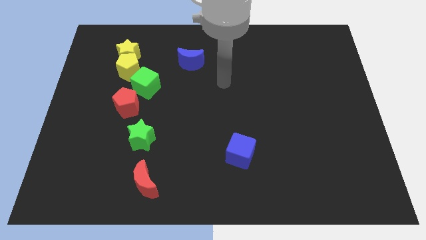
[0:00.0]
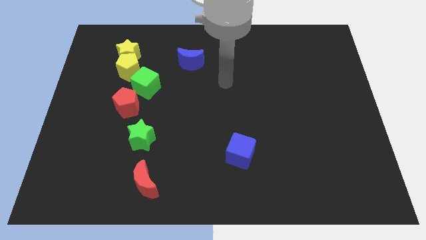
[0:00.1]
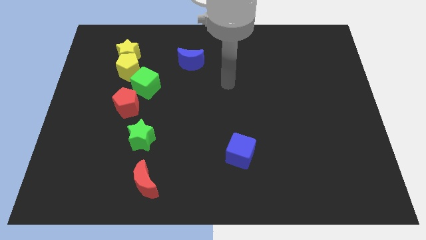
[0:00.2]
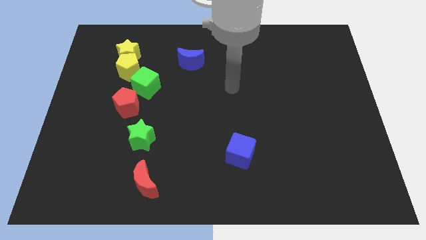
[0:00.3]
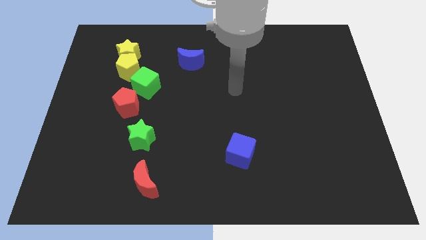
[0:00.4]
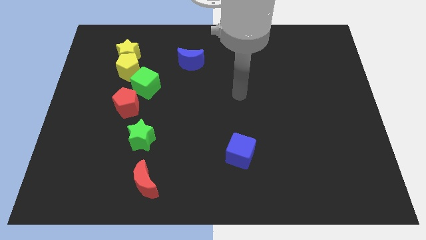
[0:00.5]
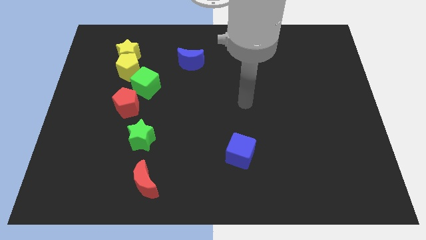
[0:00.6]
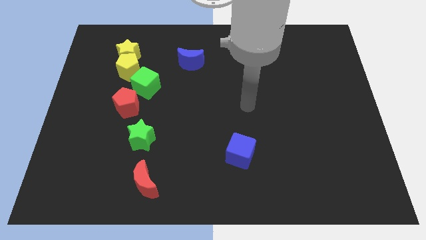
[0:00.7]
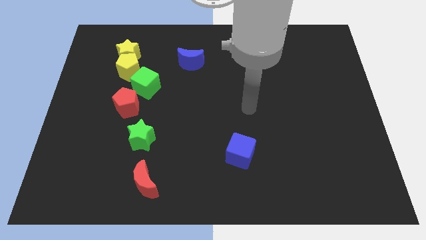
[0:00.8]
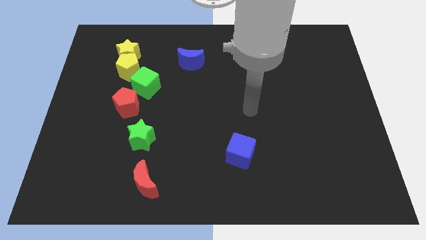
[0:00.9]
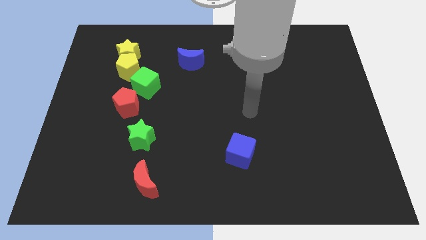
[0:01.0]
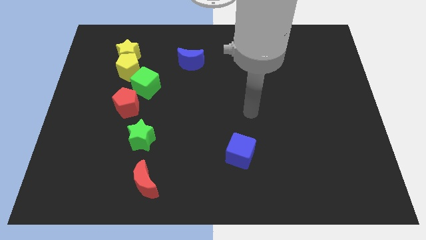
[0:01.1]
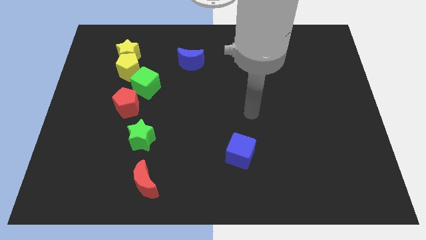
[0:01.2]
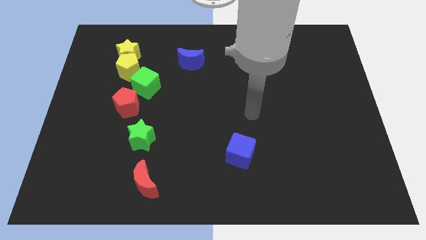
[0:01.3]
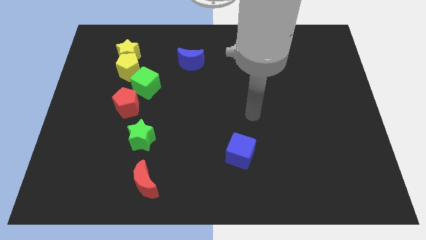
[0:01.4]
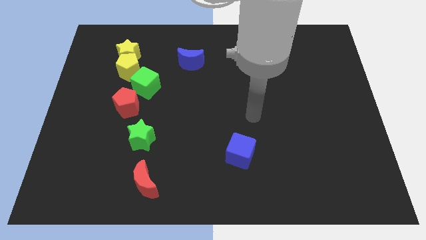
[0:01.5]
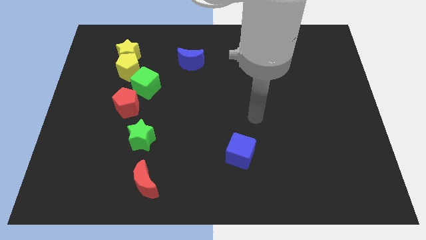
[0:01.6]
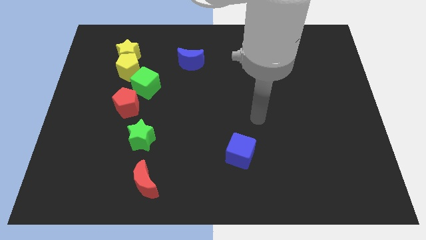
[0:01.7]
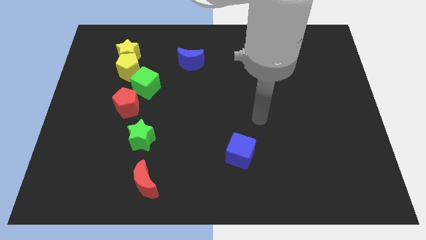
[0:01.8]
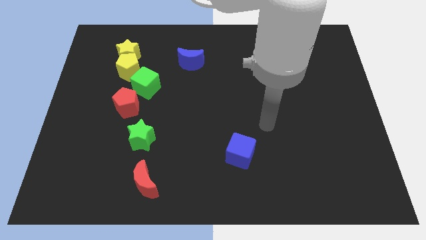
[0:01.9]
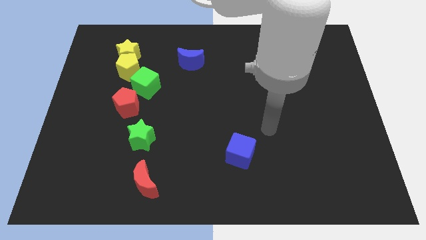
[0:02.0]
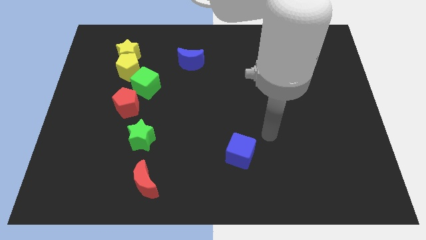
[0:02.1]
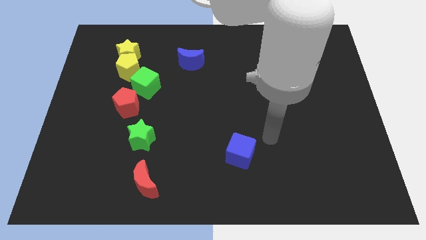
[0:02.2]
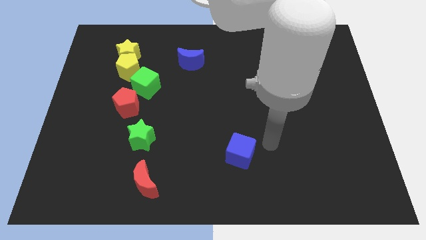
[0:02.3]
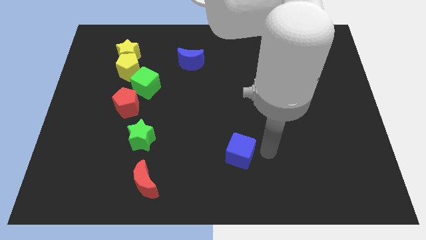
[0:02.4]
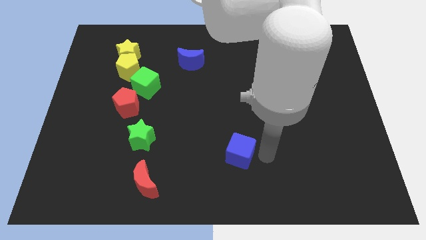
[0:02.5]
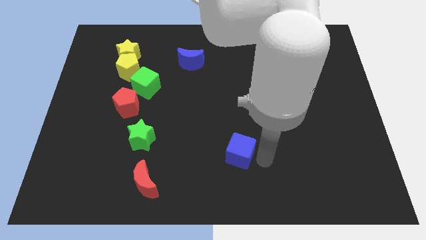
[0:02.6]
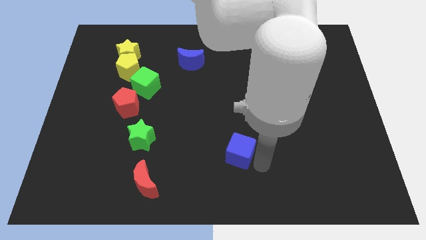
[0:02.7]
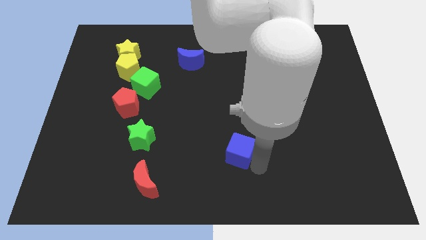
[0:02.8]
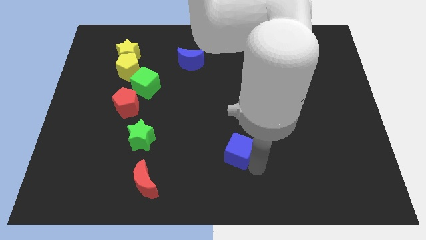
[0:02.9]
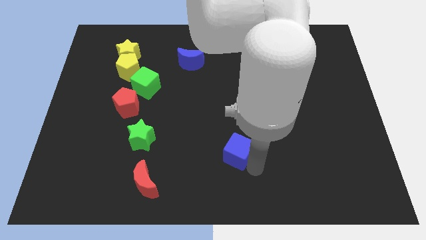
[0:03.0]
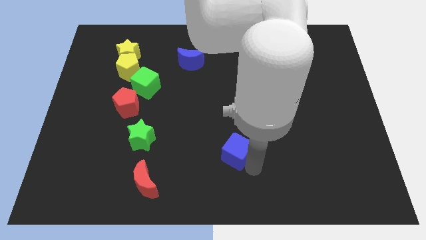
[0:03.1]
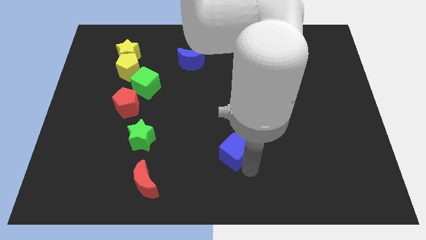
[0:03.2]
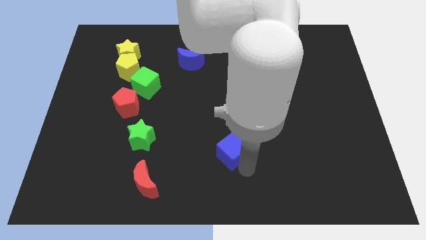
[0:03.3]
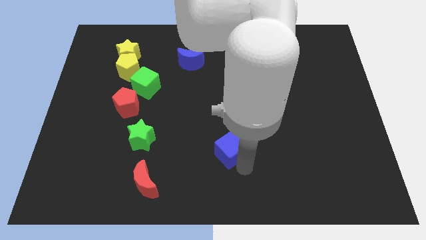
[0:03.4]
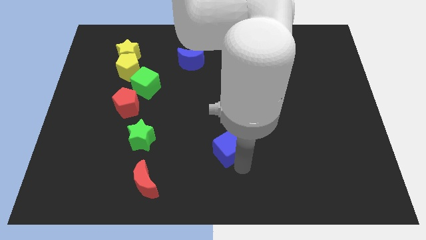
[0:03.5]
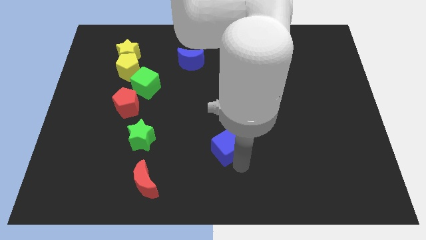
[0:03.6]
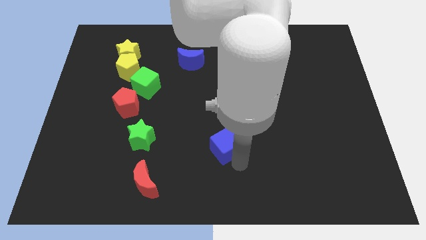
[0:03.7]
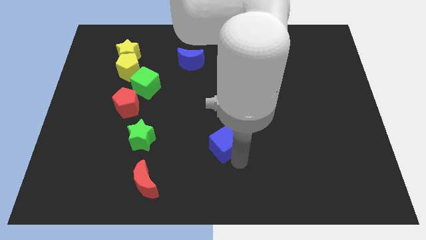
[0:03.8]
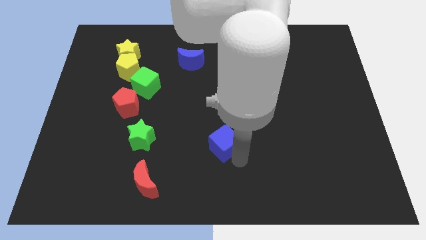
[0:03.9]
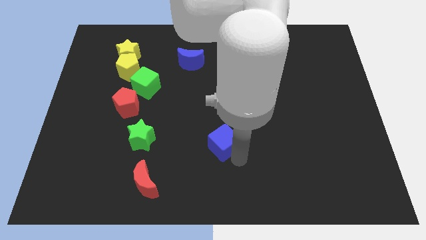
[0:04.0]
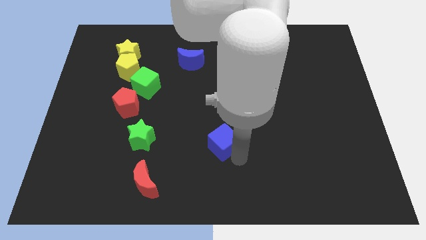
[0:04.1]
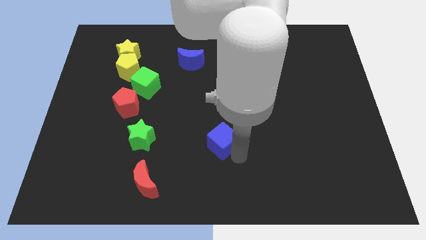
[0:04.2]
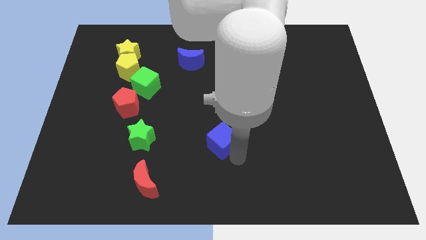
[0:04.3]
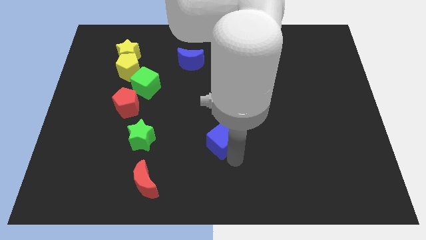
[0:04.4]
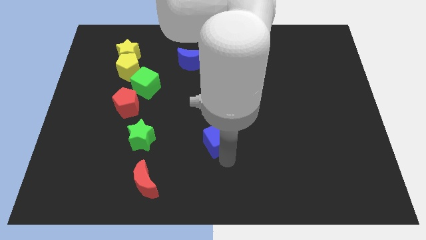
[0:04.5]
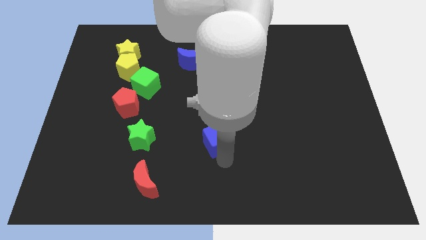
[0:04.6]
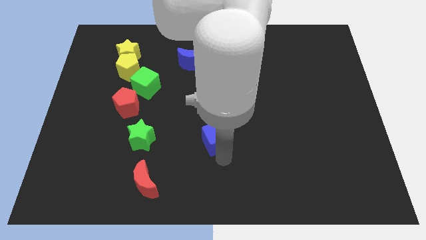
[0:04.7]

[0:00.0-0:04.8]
move the blue cube towards the top

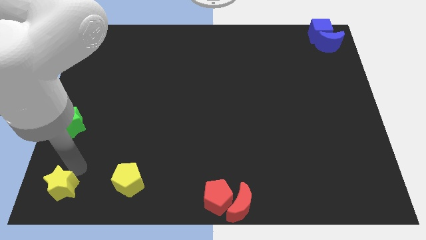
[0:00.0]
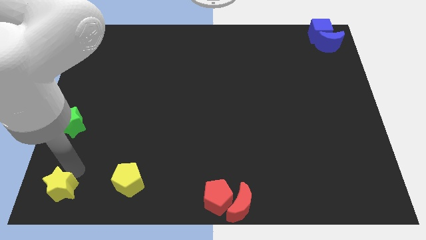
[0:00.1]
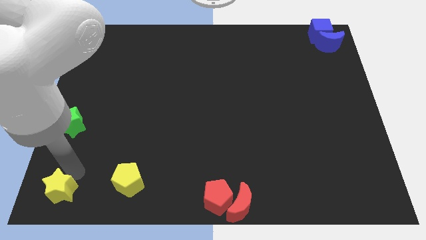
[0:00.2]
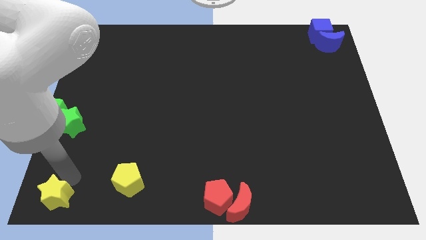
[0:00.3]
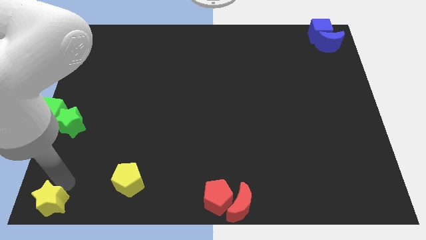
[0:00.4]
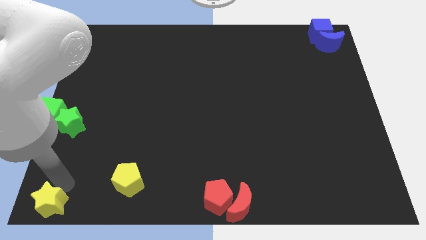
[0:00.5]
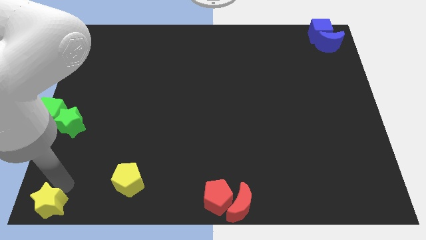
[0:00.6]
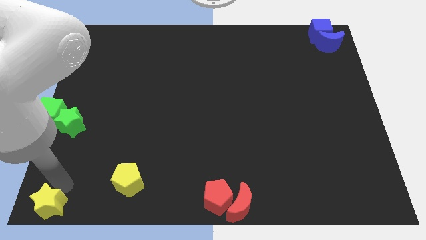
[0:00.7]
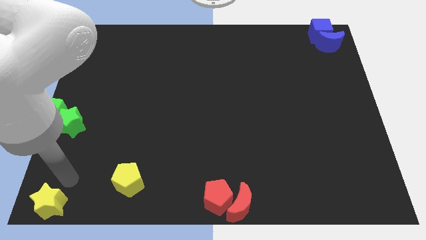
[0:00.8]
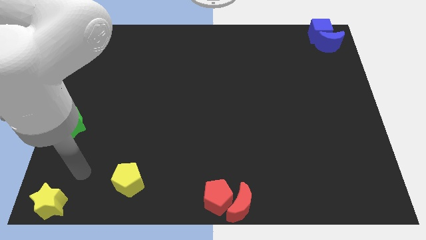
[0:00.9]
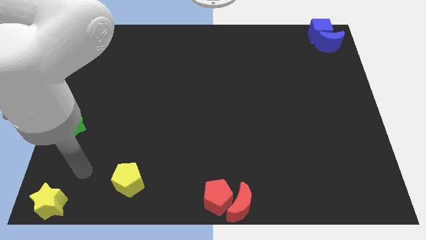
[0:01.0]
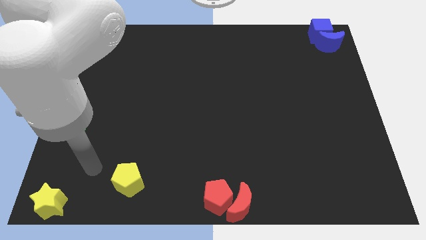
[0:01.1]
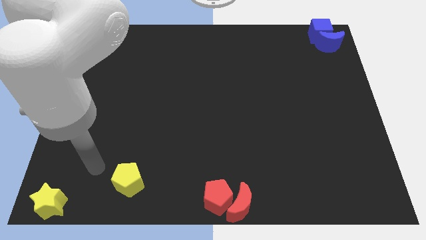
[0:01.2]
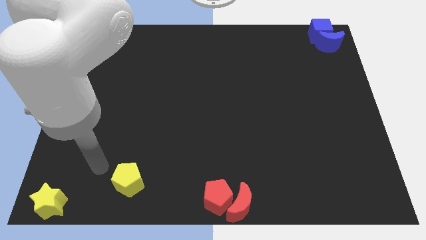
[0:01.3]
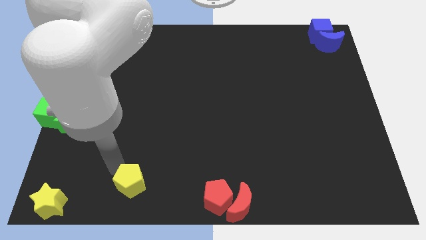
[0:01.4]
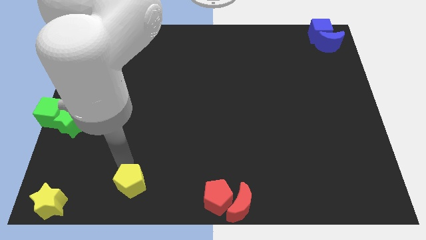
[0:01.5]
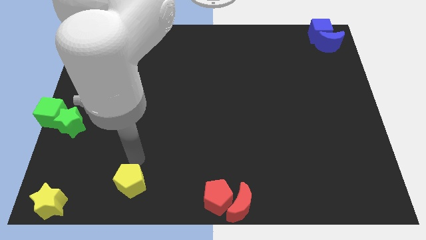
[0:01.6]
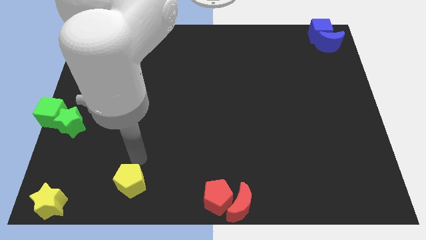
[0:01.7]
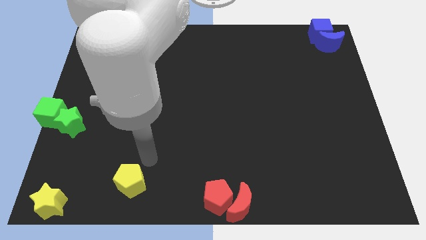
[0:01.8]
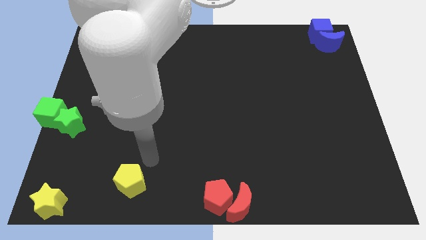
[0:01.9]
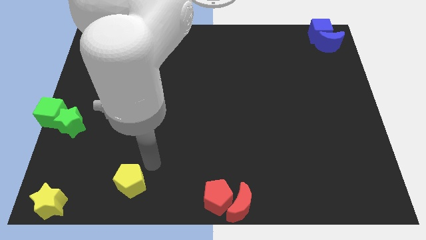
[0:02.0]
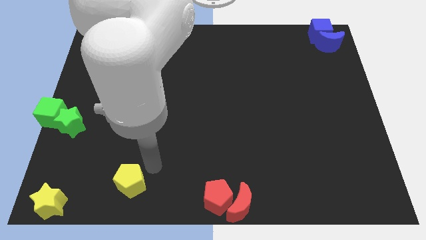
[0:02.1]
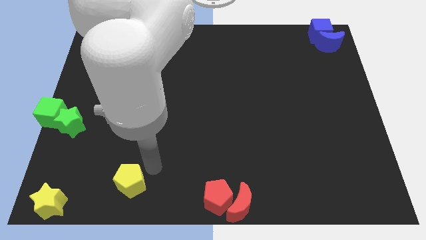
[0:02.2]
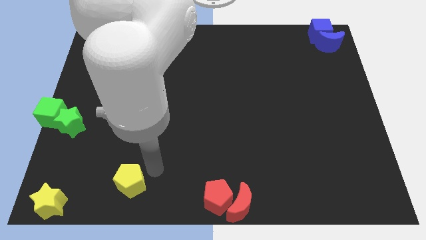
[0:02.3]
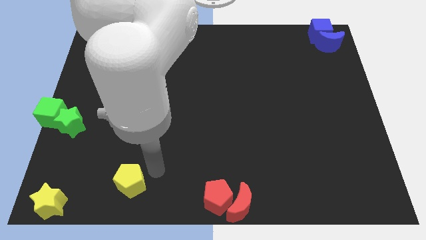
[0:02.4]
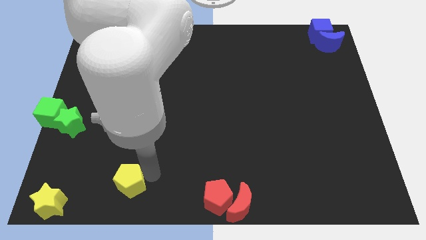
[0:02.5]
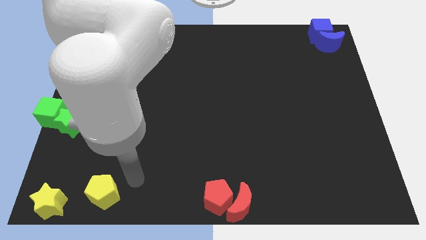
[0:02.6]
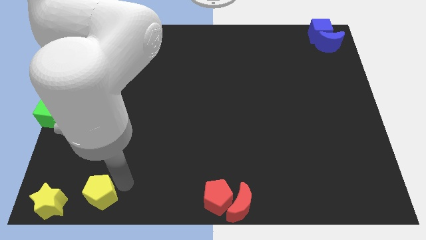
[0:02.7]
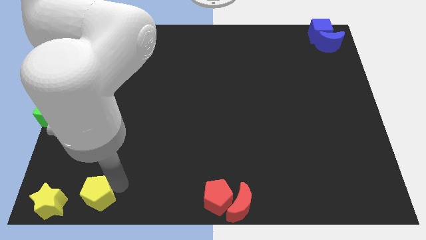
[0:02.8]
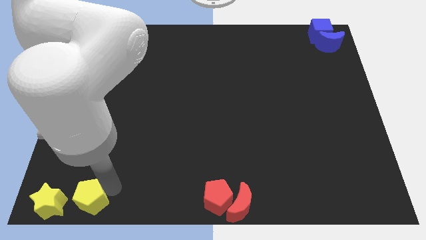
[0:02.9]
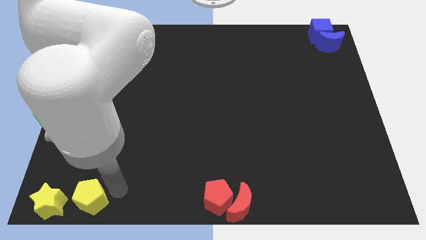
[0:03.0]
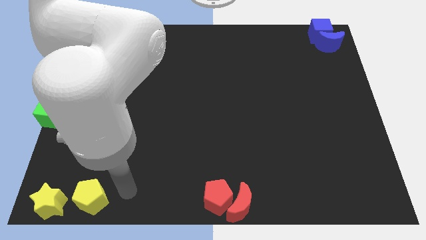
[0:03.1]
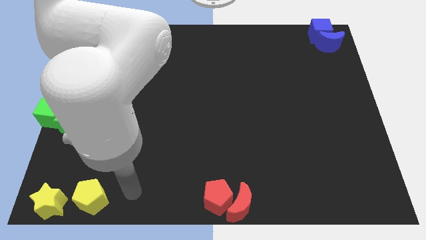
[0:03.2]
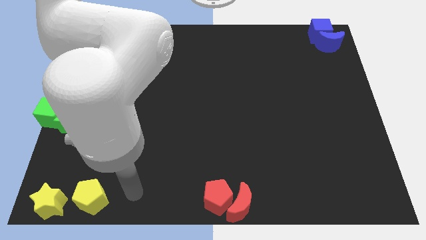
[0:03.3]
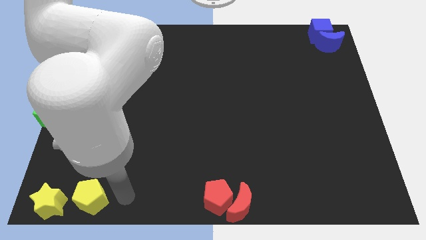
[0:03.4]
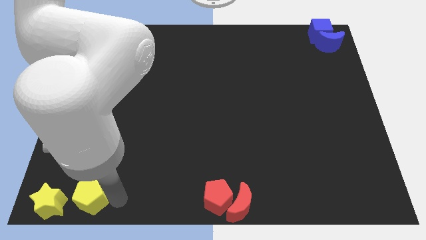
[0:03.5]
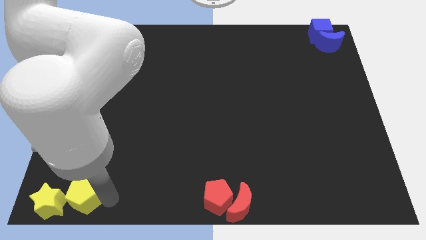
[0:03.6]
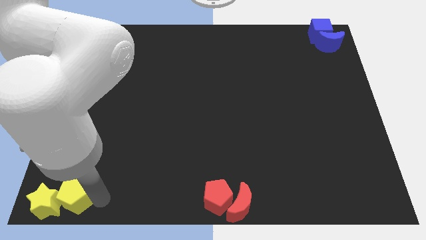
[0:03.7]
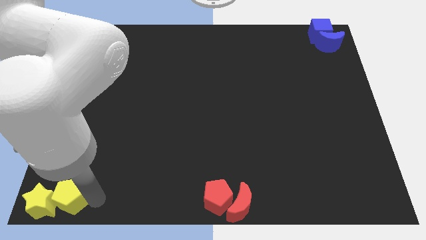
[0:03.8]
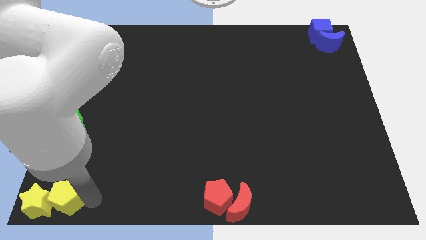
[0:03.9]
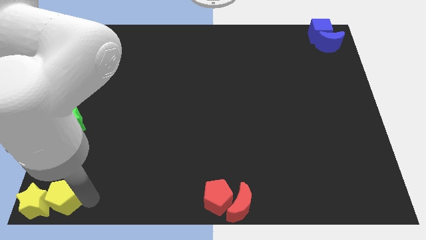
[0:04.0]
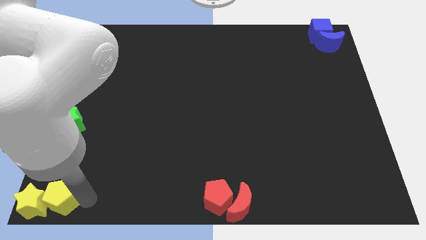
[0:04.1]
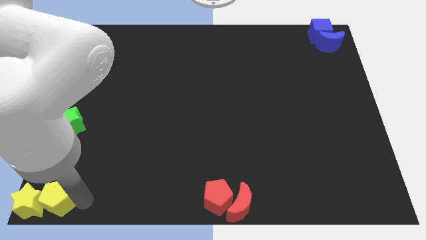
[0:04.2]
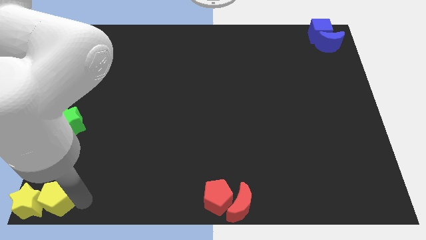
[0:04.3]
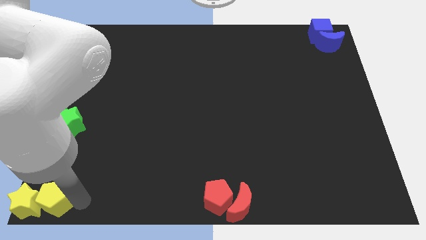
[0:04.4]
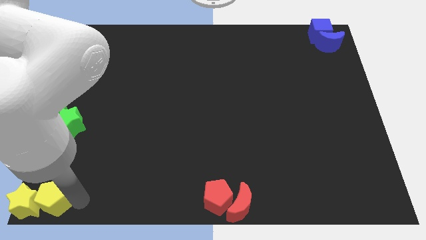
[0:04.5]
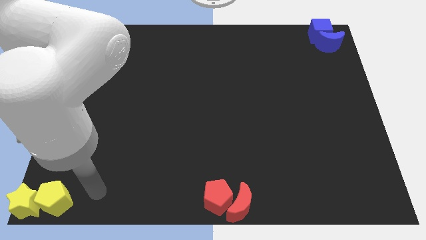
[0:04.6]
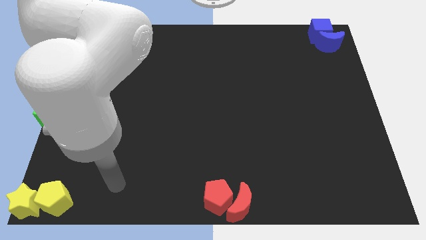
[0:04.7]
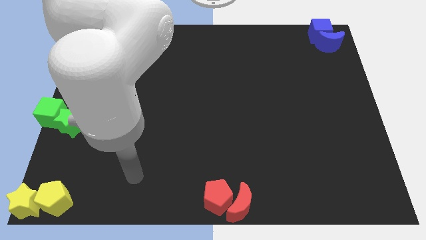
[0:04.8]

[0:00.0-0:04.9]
move the yellow blocks to the bottom left corner of the board
